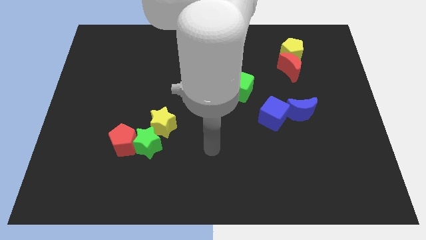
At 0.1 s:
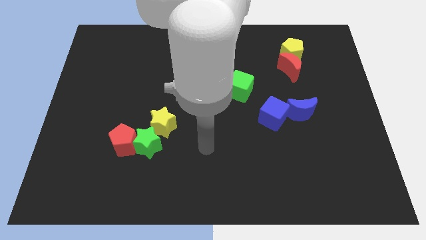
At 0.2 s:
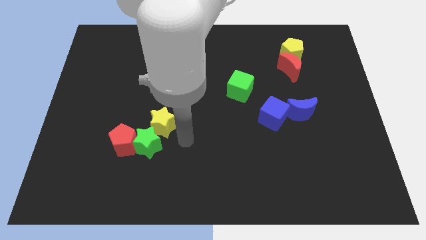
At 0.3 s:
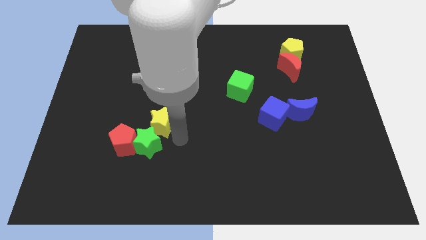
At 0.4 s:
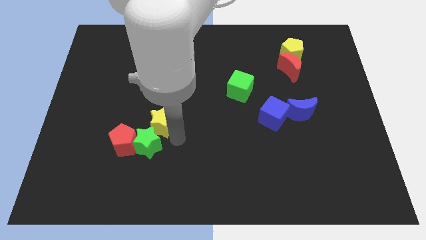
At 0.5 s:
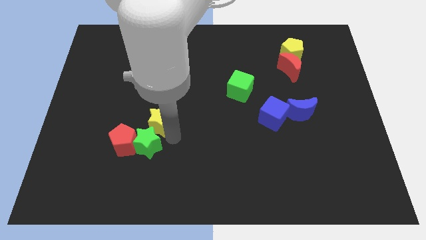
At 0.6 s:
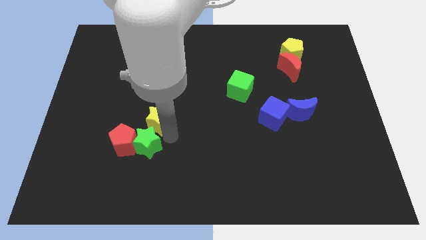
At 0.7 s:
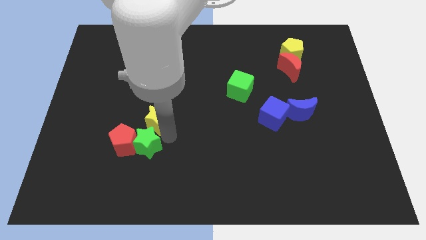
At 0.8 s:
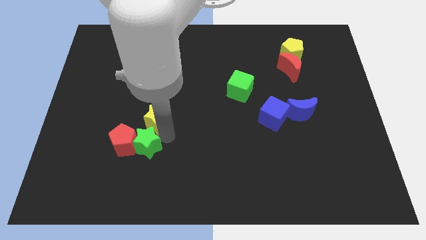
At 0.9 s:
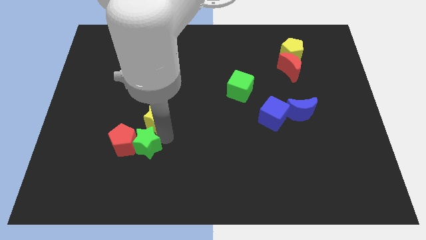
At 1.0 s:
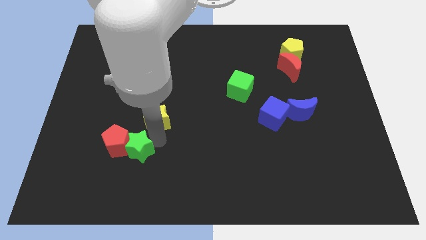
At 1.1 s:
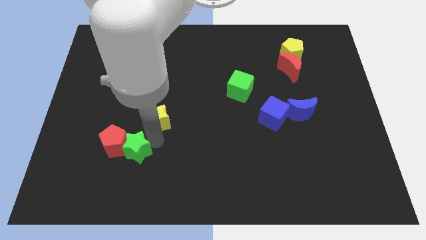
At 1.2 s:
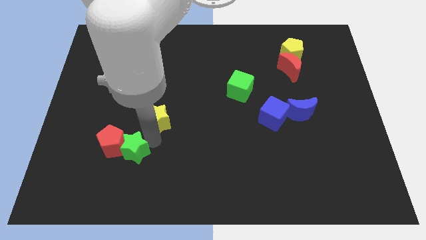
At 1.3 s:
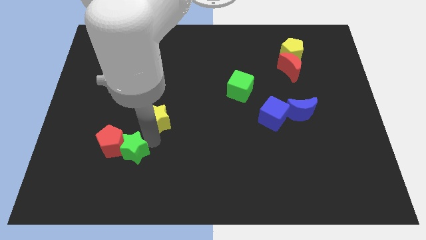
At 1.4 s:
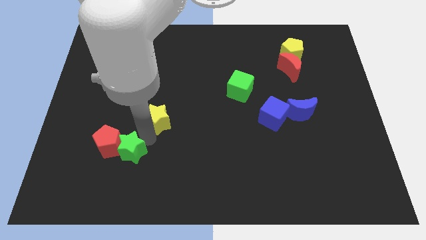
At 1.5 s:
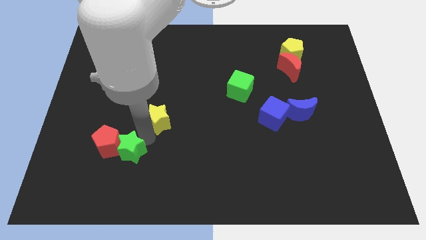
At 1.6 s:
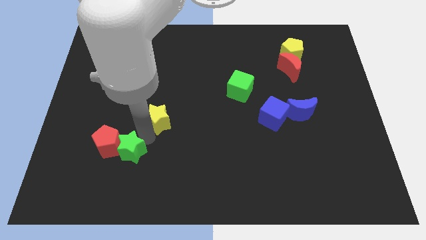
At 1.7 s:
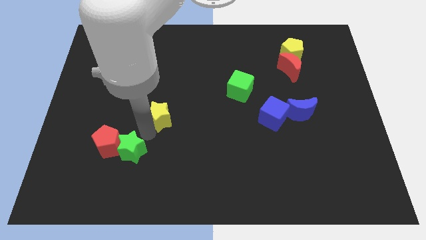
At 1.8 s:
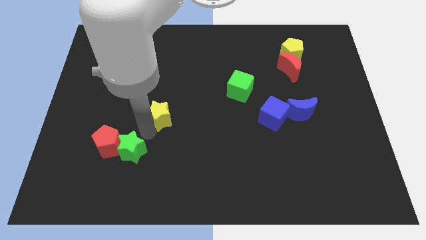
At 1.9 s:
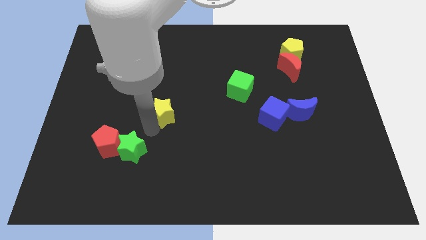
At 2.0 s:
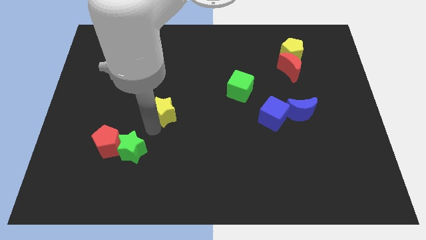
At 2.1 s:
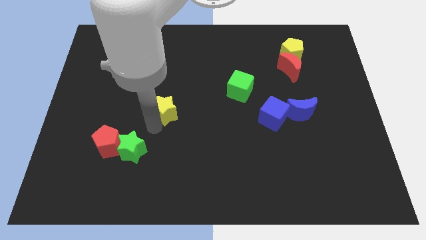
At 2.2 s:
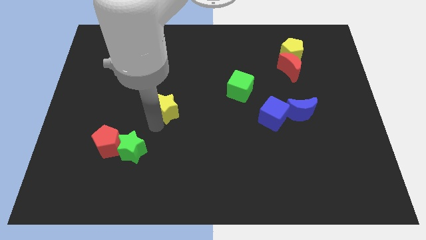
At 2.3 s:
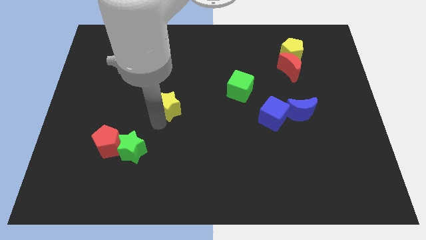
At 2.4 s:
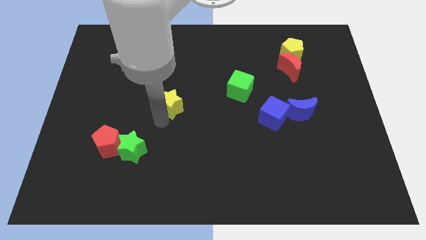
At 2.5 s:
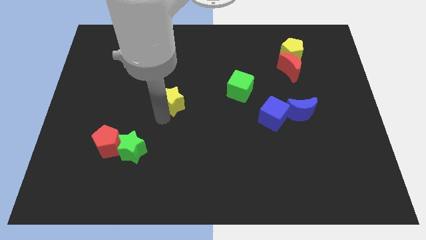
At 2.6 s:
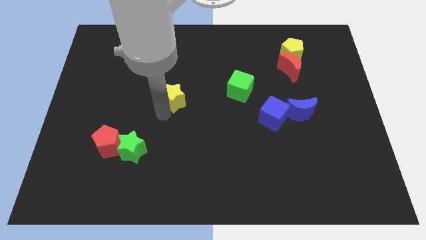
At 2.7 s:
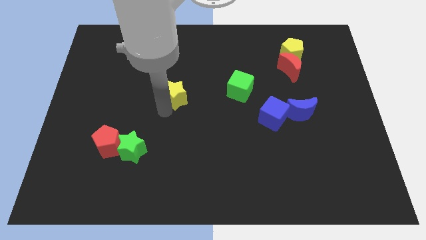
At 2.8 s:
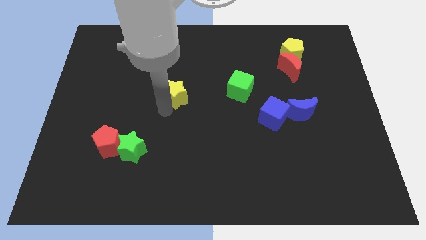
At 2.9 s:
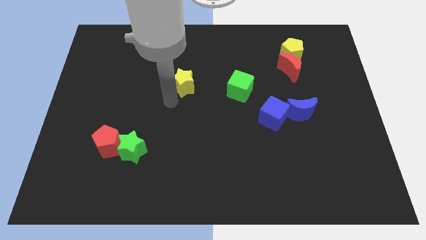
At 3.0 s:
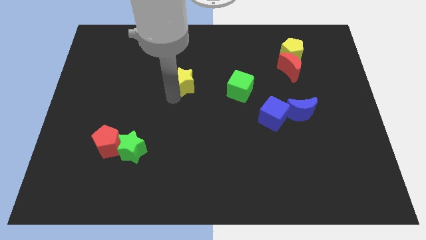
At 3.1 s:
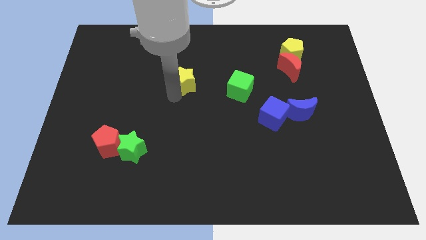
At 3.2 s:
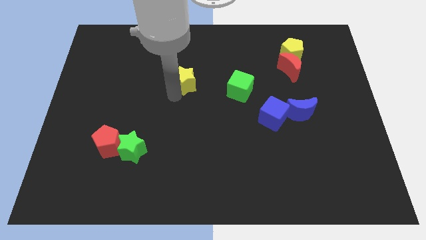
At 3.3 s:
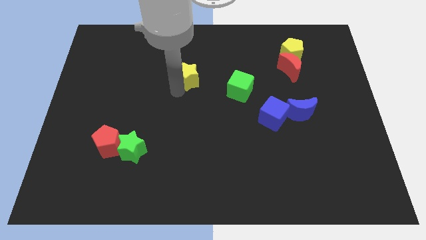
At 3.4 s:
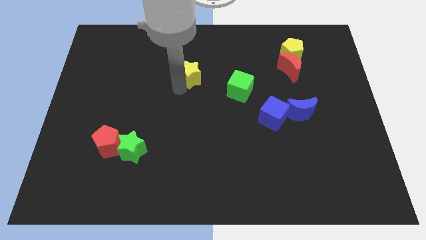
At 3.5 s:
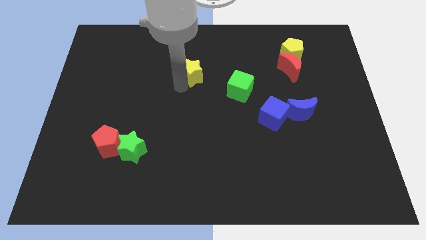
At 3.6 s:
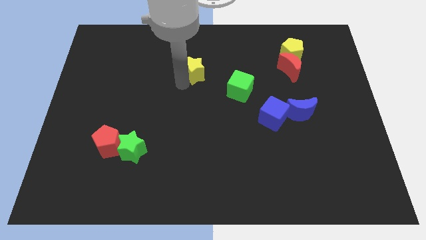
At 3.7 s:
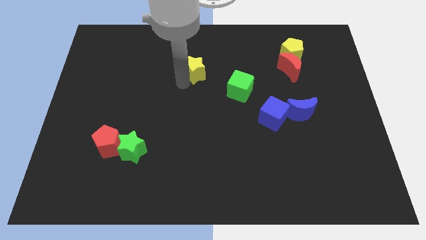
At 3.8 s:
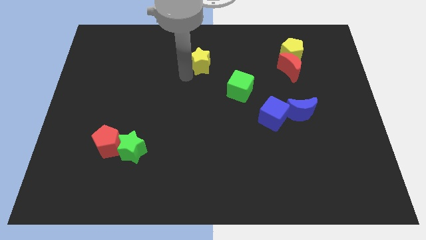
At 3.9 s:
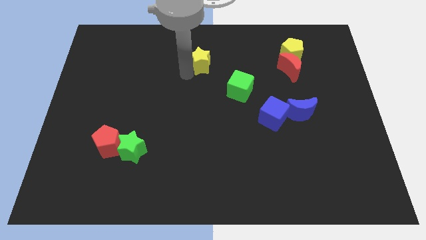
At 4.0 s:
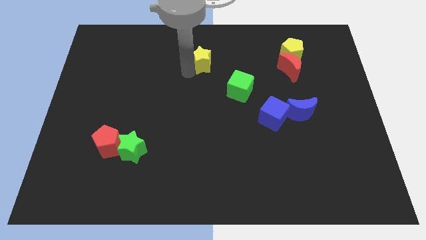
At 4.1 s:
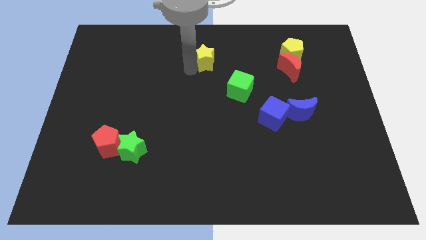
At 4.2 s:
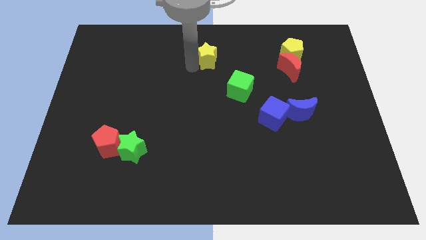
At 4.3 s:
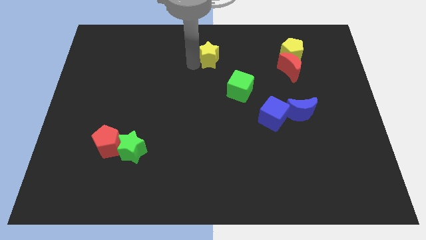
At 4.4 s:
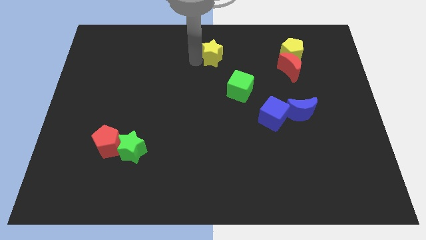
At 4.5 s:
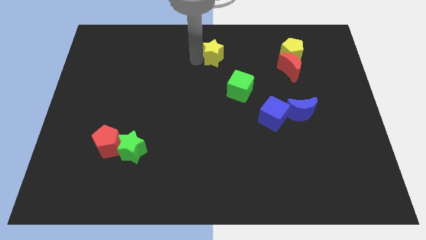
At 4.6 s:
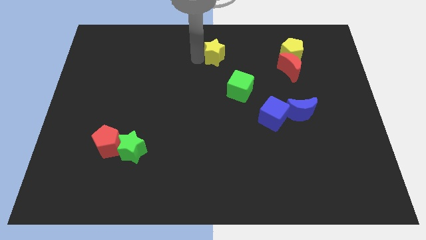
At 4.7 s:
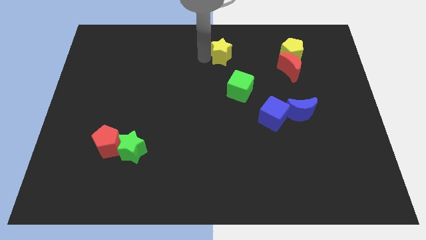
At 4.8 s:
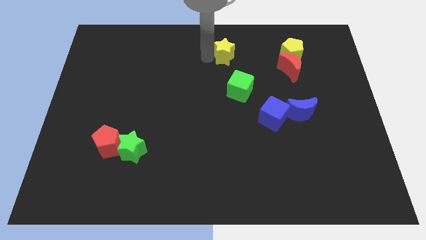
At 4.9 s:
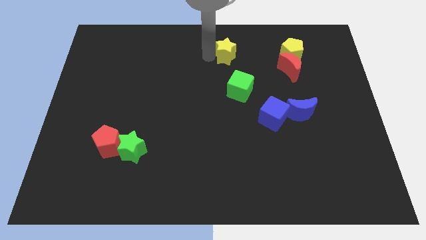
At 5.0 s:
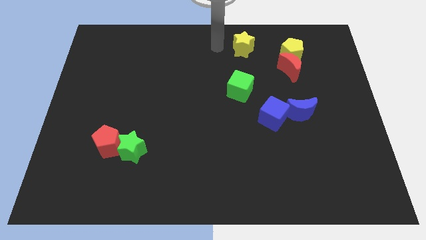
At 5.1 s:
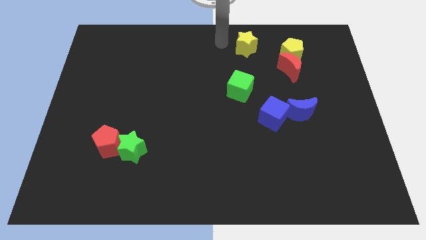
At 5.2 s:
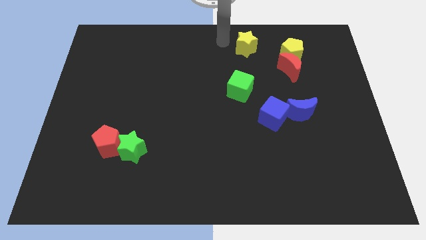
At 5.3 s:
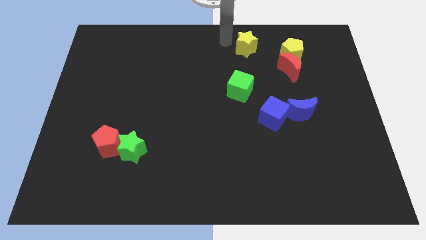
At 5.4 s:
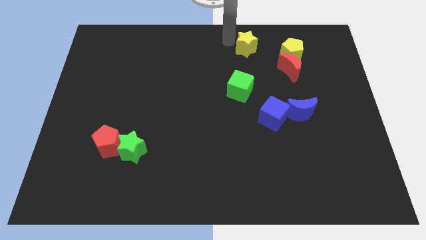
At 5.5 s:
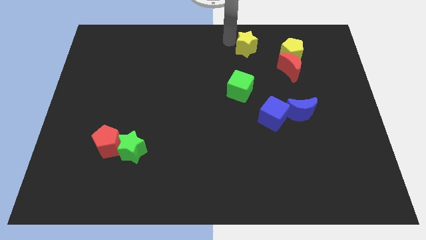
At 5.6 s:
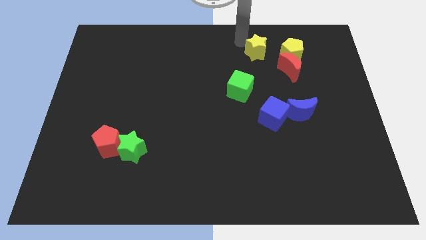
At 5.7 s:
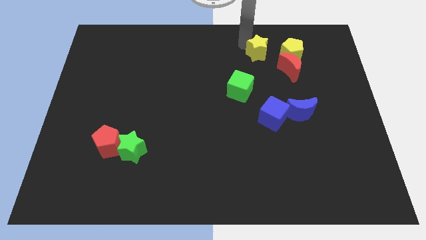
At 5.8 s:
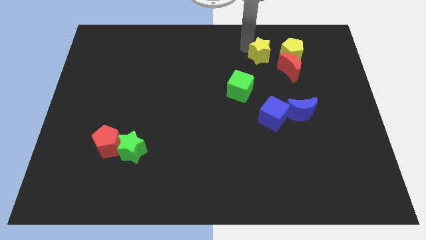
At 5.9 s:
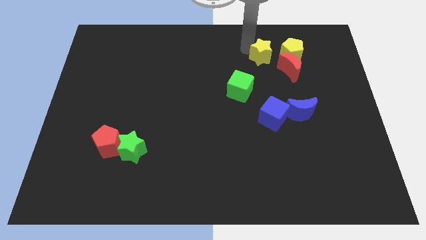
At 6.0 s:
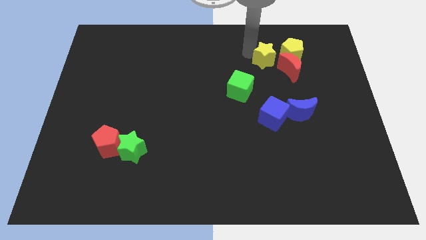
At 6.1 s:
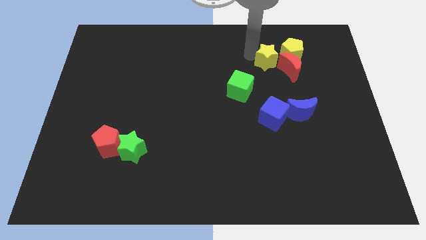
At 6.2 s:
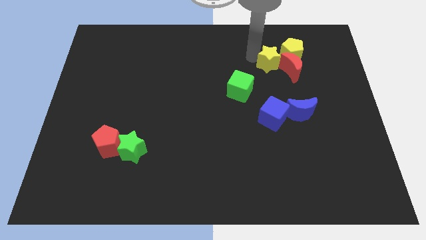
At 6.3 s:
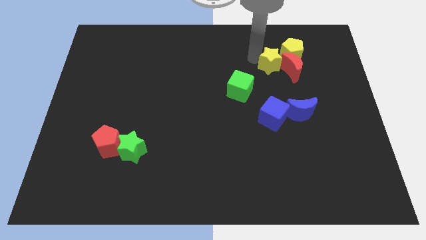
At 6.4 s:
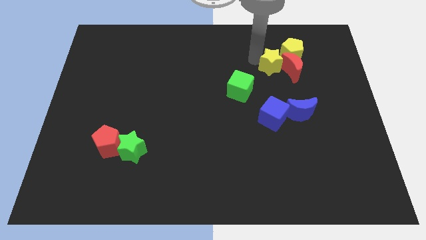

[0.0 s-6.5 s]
push the yellow star to the red moon

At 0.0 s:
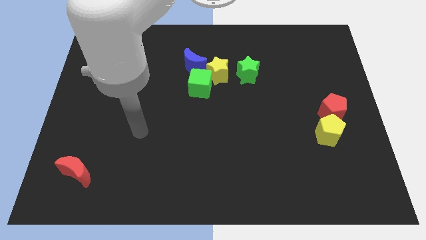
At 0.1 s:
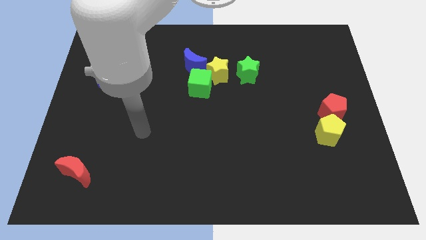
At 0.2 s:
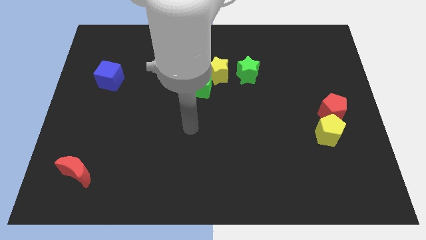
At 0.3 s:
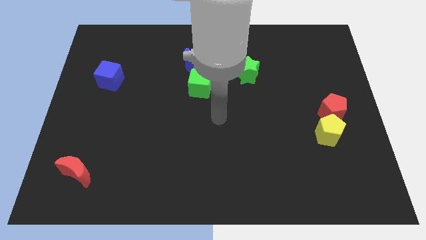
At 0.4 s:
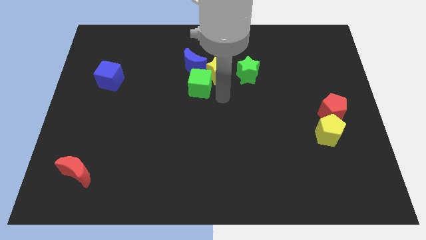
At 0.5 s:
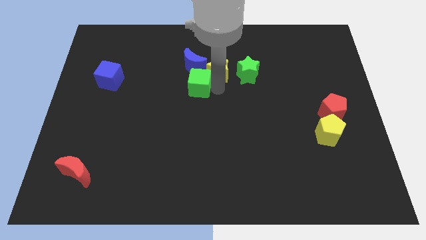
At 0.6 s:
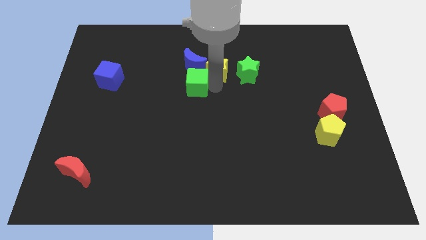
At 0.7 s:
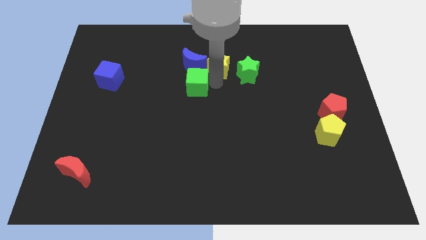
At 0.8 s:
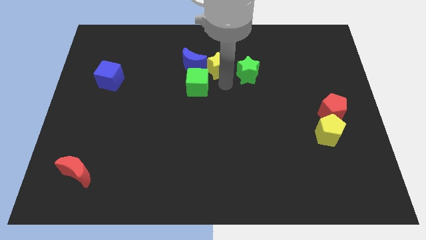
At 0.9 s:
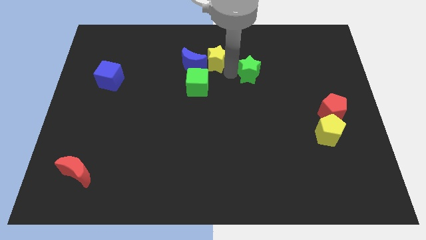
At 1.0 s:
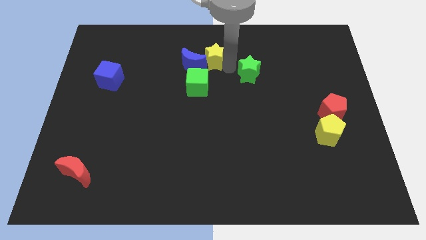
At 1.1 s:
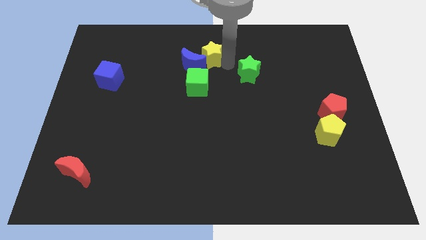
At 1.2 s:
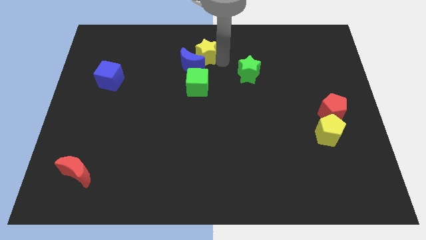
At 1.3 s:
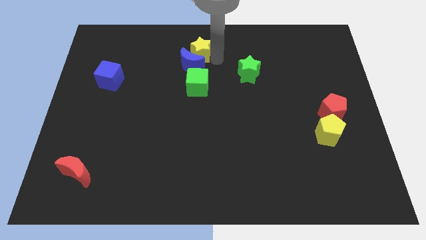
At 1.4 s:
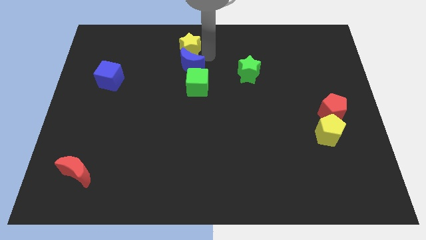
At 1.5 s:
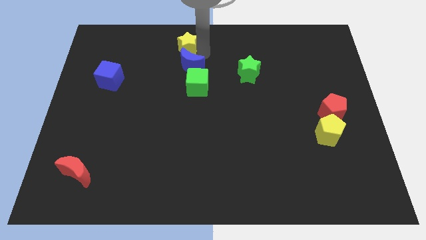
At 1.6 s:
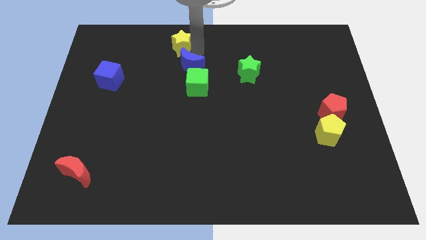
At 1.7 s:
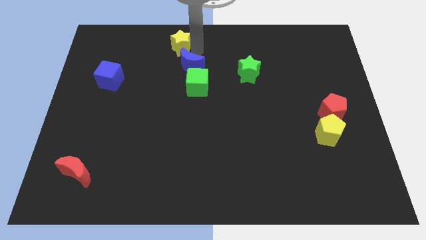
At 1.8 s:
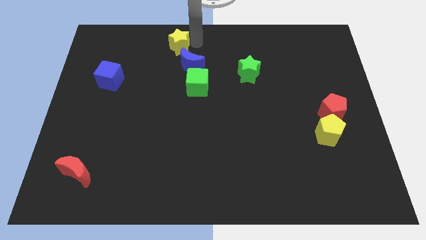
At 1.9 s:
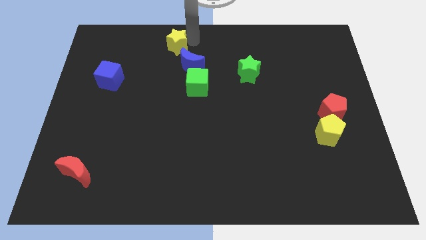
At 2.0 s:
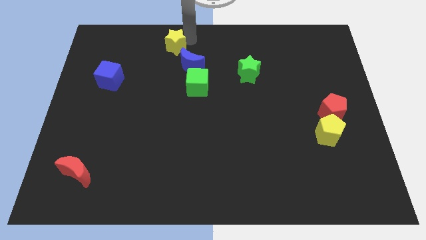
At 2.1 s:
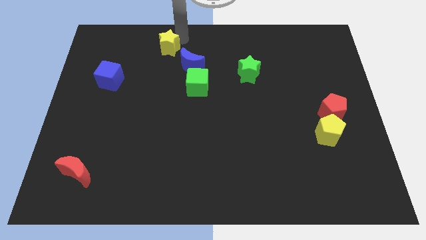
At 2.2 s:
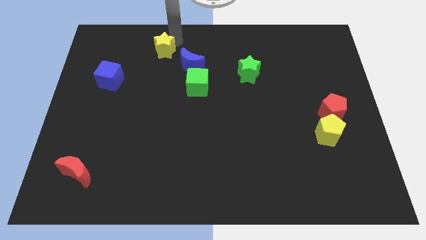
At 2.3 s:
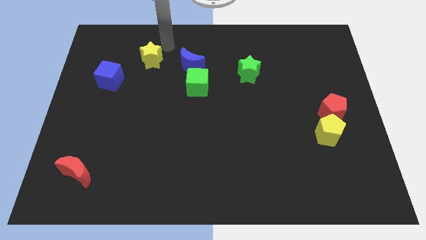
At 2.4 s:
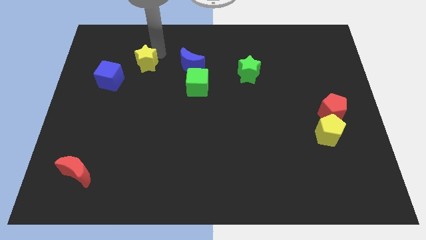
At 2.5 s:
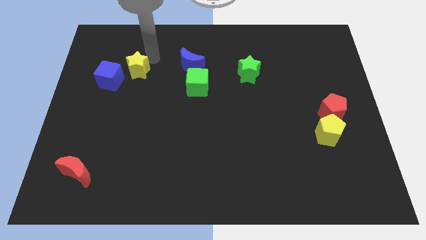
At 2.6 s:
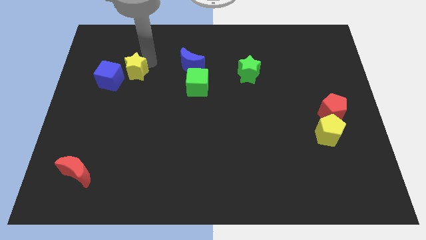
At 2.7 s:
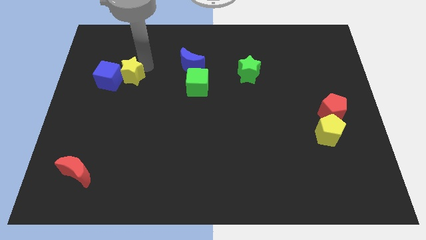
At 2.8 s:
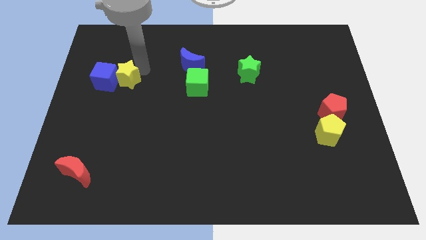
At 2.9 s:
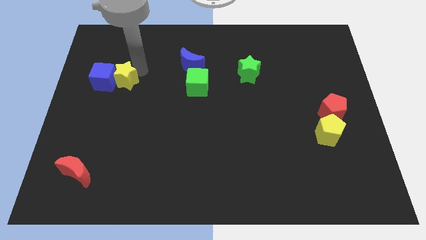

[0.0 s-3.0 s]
slide the yellow star to the blue cube
